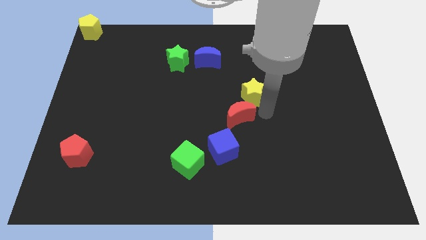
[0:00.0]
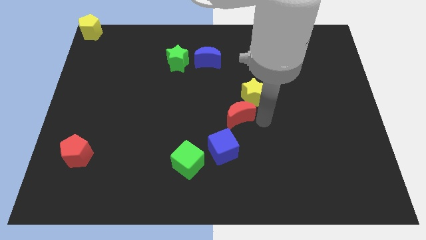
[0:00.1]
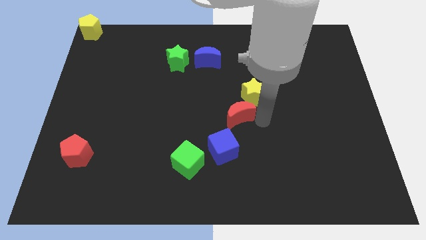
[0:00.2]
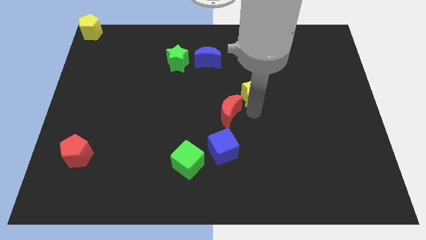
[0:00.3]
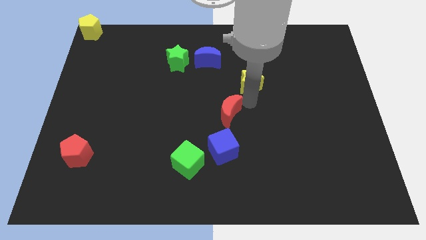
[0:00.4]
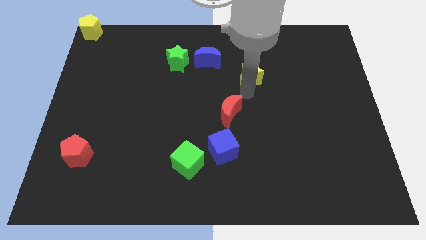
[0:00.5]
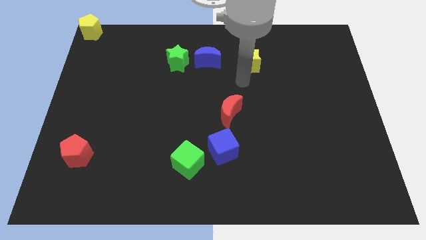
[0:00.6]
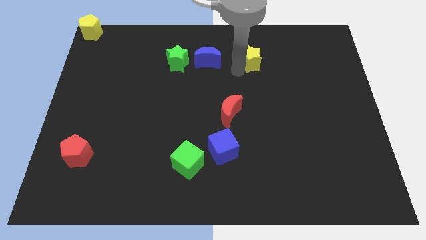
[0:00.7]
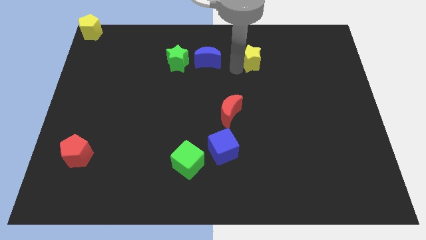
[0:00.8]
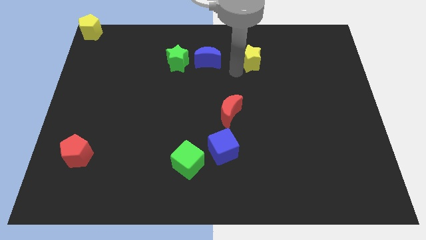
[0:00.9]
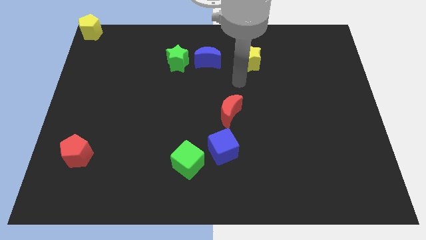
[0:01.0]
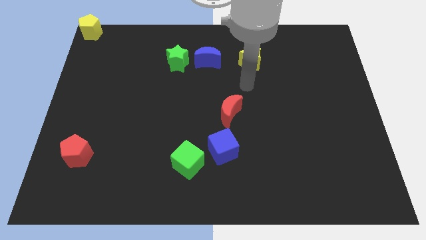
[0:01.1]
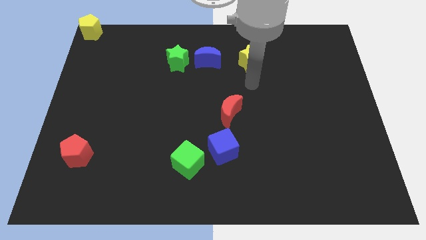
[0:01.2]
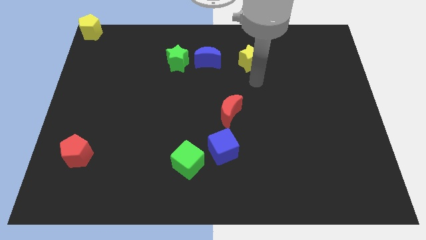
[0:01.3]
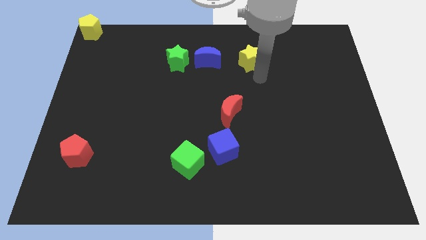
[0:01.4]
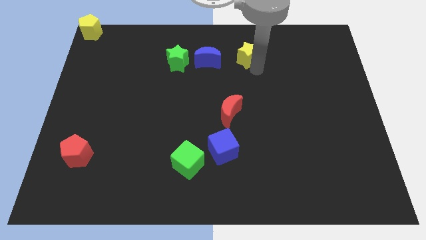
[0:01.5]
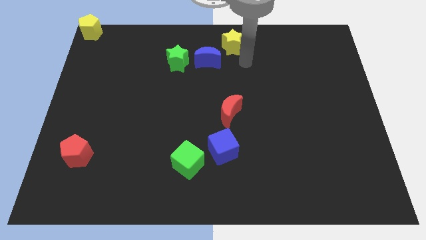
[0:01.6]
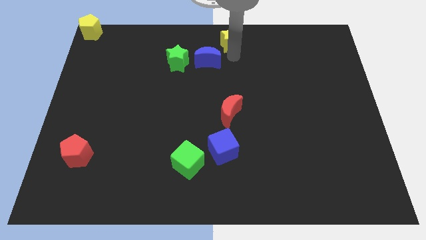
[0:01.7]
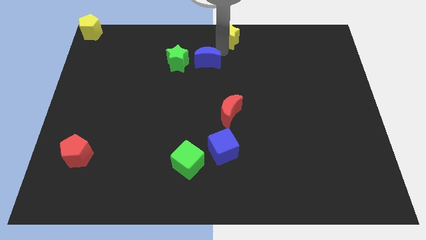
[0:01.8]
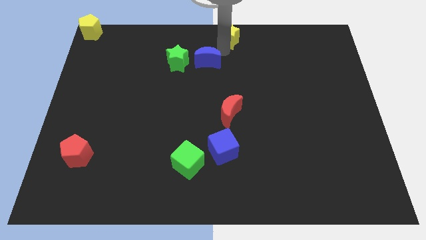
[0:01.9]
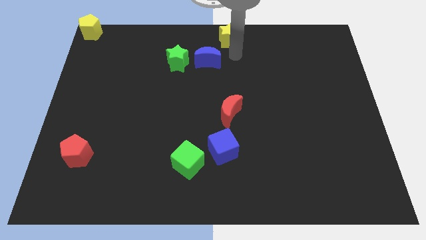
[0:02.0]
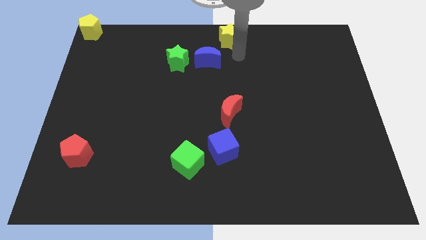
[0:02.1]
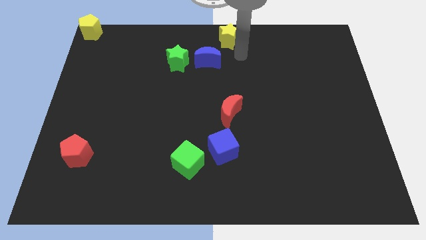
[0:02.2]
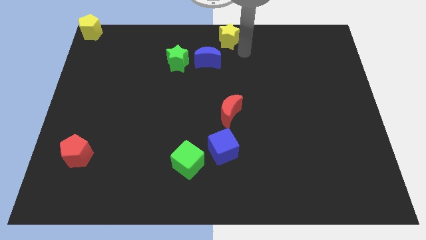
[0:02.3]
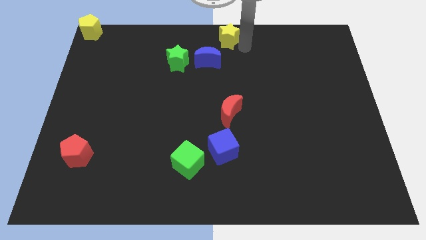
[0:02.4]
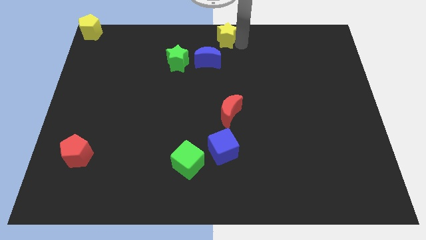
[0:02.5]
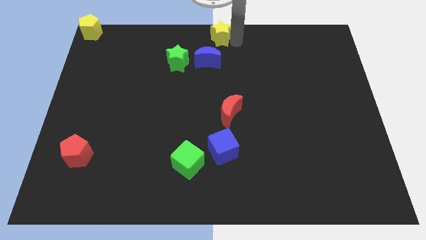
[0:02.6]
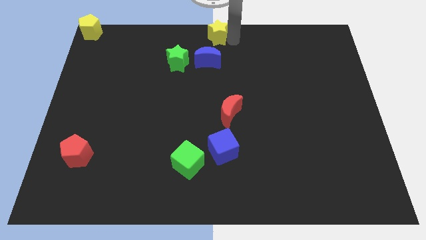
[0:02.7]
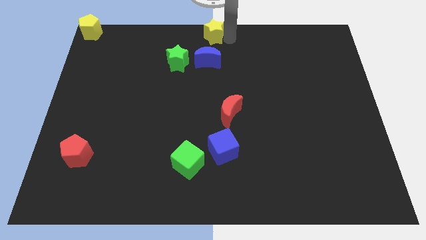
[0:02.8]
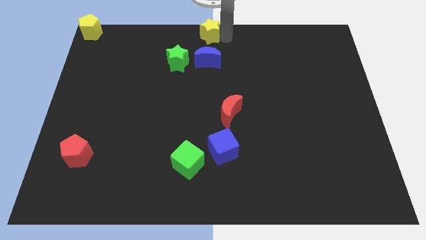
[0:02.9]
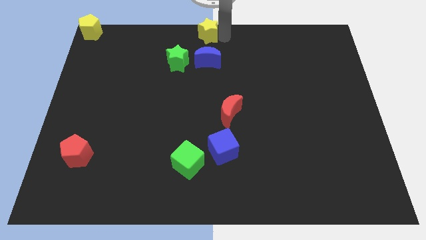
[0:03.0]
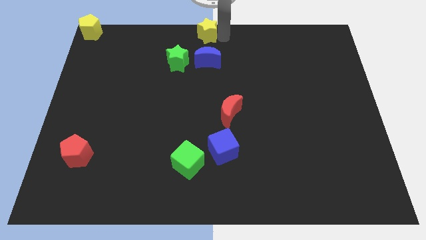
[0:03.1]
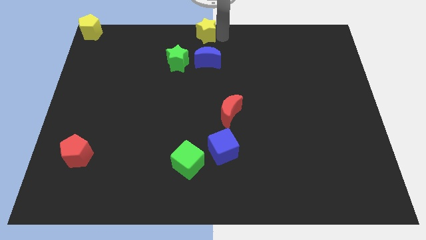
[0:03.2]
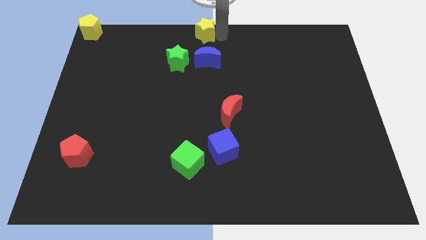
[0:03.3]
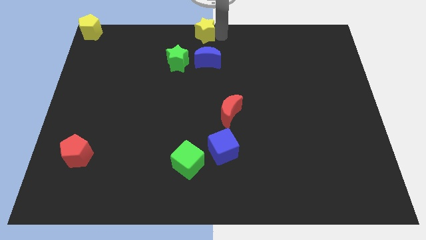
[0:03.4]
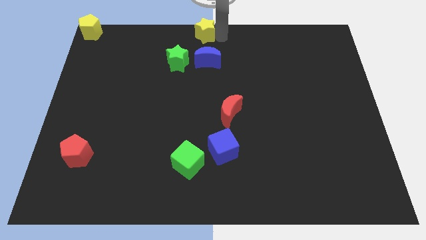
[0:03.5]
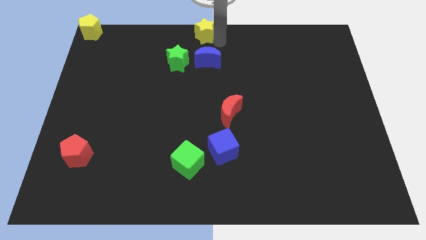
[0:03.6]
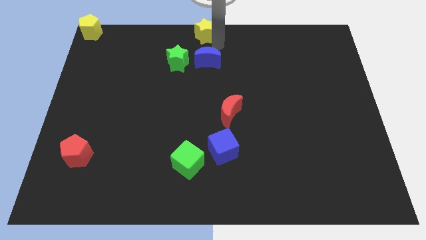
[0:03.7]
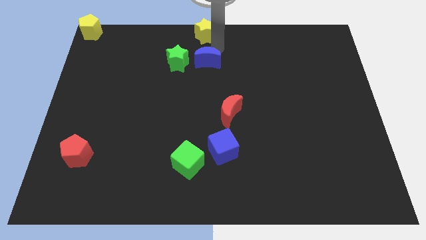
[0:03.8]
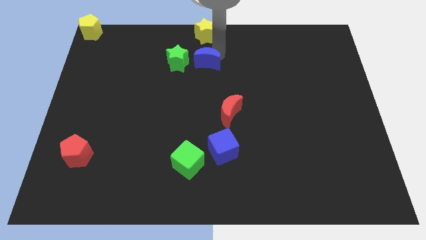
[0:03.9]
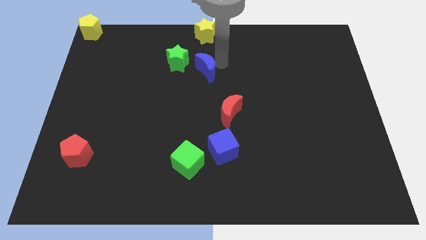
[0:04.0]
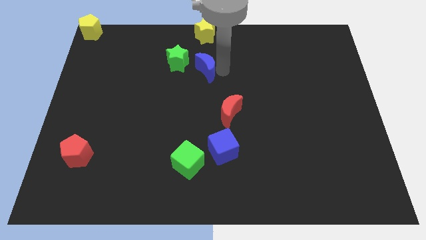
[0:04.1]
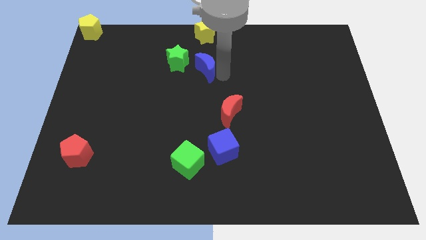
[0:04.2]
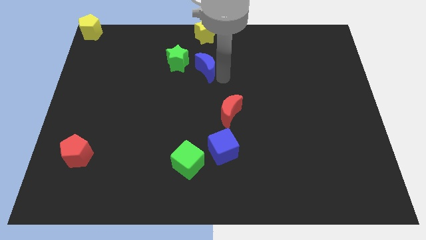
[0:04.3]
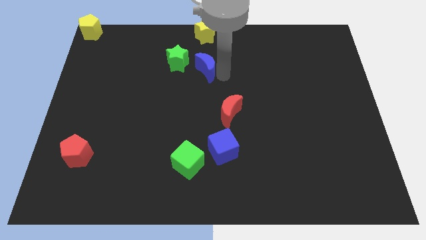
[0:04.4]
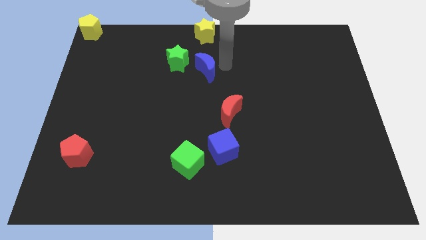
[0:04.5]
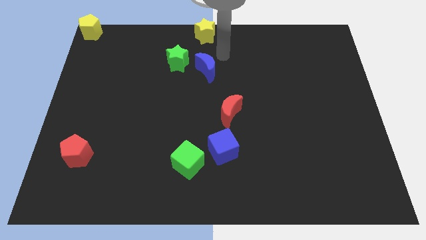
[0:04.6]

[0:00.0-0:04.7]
move the yellow star to the top center of the board

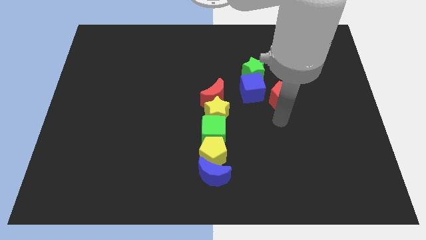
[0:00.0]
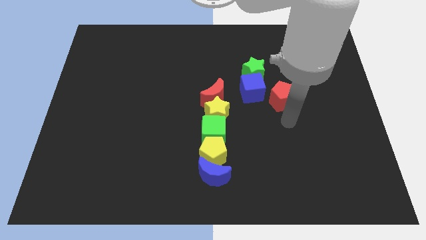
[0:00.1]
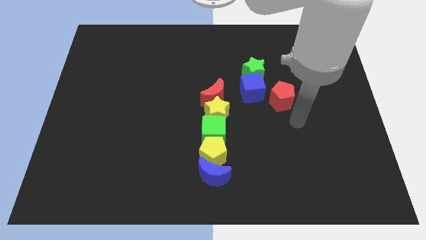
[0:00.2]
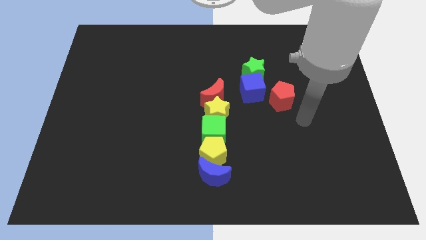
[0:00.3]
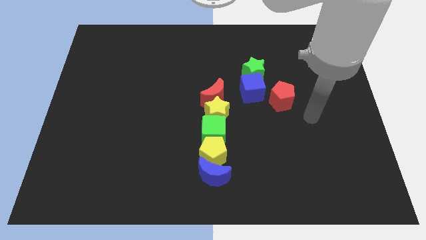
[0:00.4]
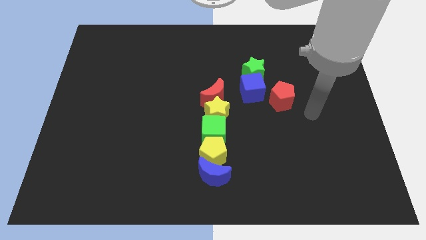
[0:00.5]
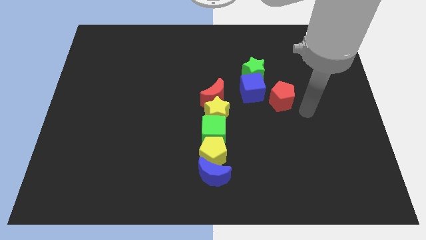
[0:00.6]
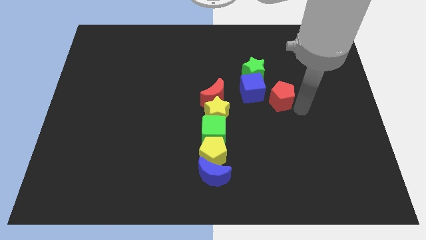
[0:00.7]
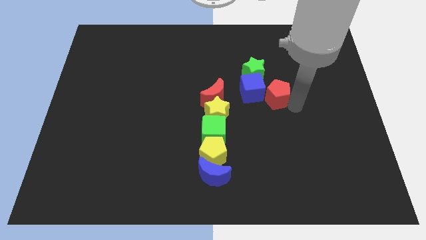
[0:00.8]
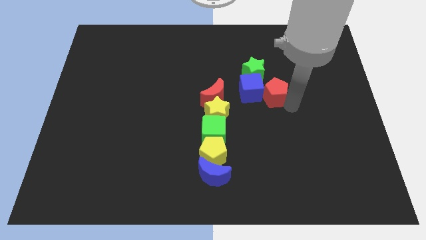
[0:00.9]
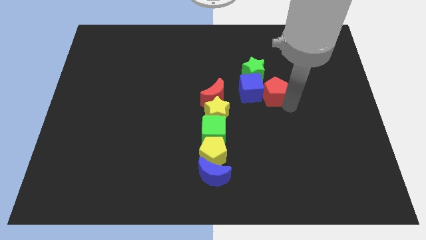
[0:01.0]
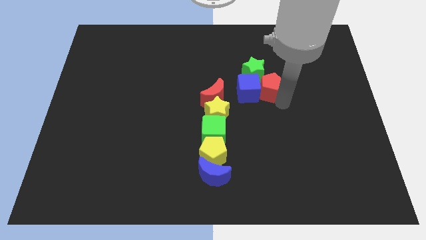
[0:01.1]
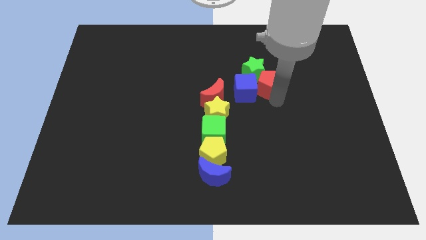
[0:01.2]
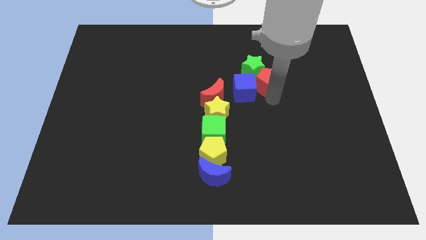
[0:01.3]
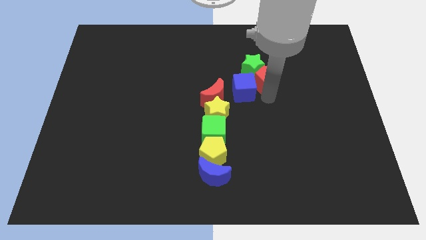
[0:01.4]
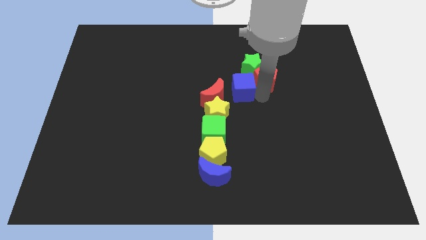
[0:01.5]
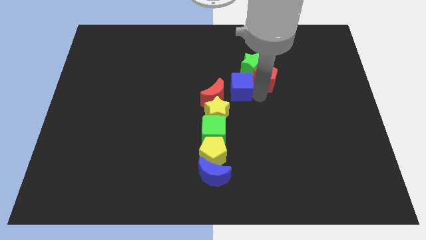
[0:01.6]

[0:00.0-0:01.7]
slide the red pentagon into the blue cube

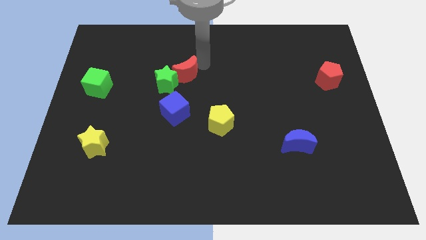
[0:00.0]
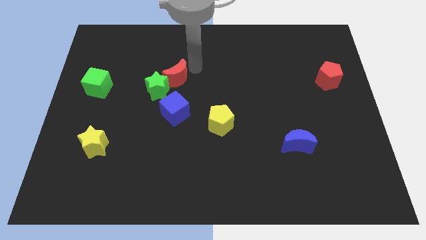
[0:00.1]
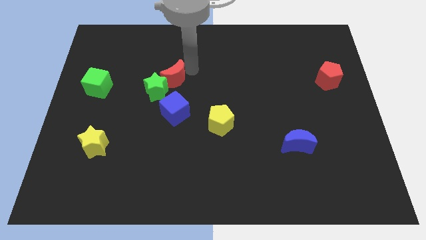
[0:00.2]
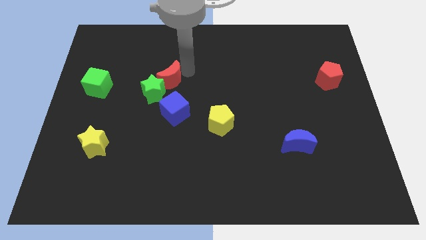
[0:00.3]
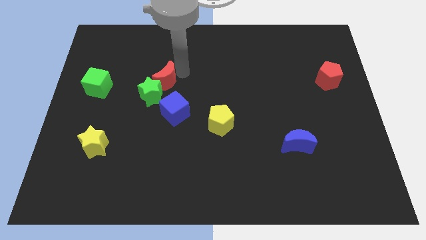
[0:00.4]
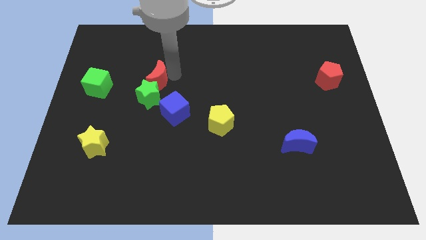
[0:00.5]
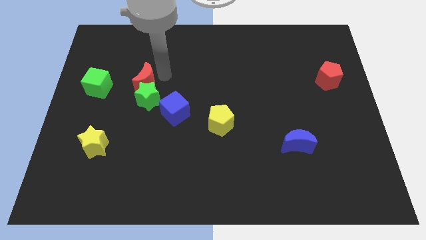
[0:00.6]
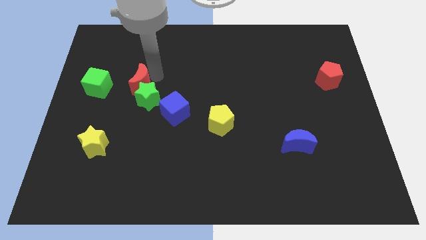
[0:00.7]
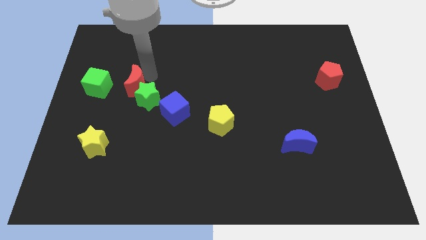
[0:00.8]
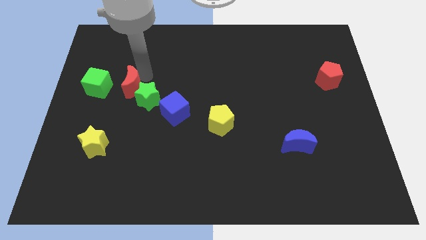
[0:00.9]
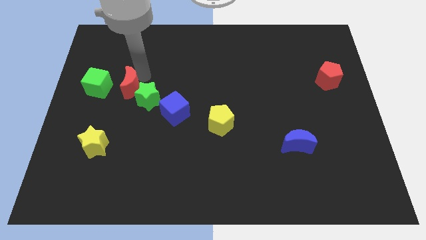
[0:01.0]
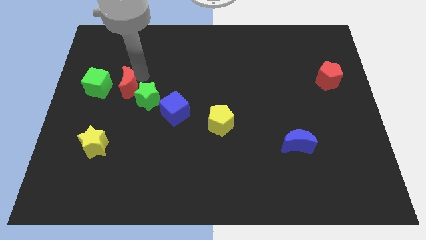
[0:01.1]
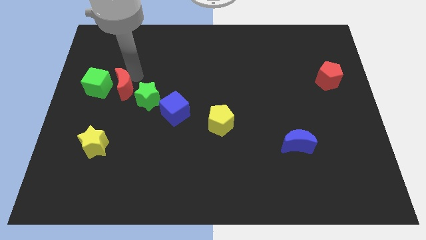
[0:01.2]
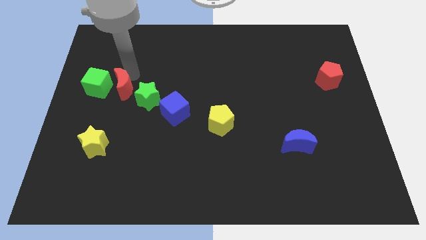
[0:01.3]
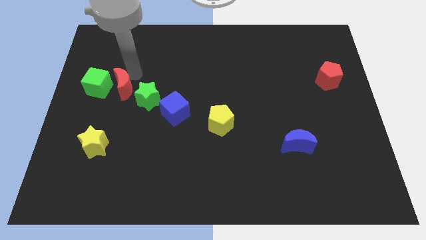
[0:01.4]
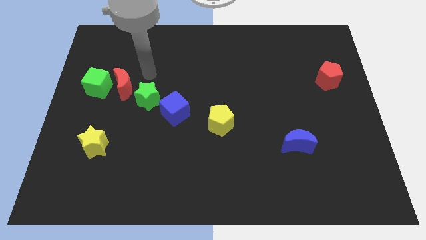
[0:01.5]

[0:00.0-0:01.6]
place the red moon right to the green cube

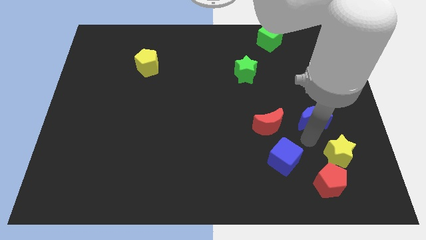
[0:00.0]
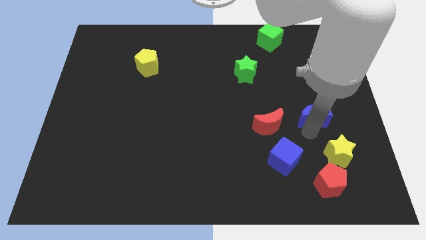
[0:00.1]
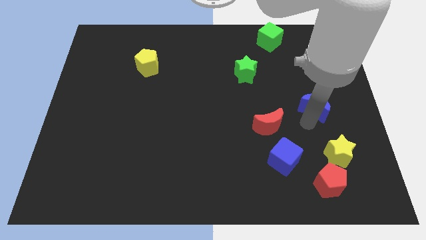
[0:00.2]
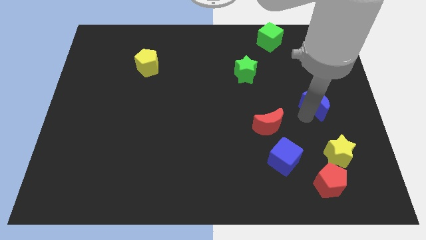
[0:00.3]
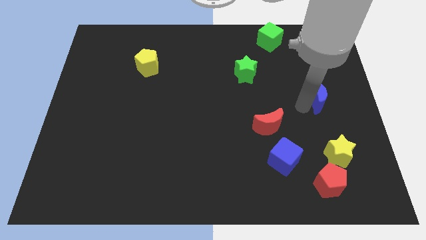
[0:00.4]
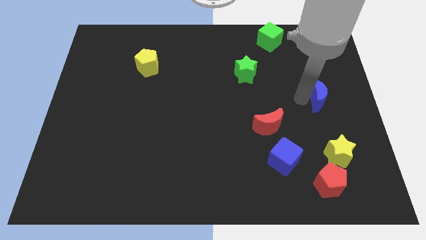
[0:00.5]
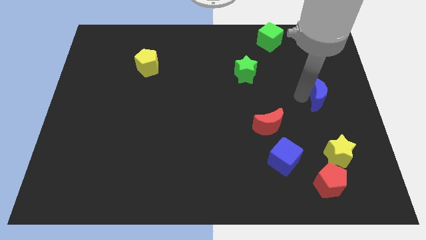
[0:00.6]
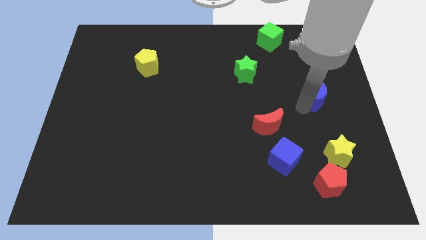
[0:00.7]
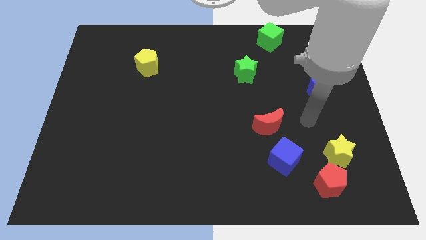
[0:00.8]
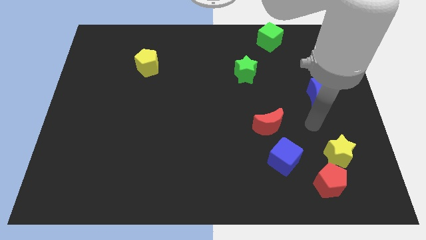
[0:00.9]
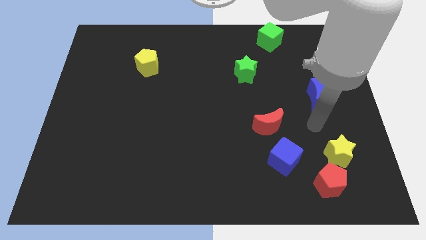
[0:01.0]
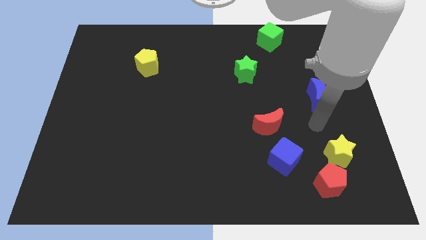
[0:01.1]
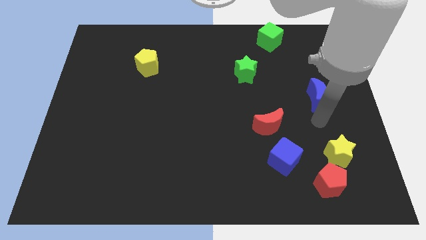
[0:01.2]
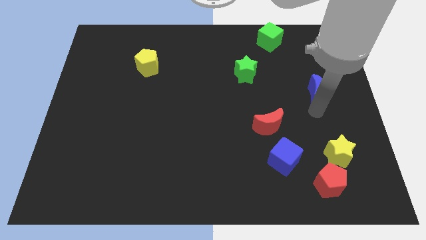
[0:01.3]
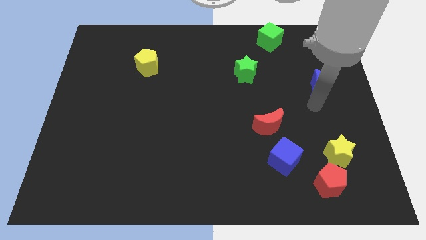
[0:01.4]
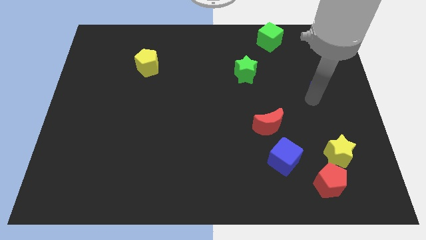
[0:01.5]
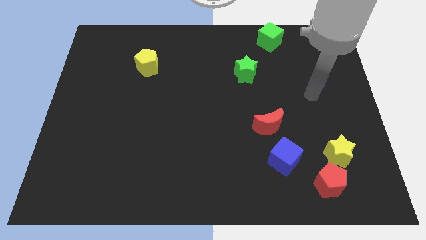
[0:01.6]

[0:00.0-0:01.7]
push the blue cube slightly up
